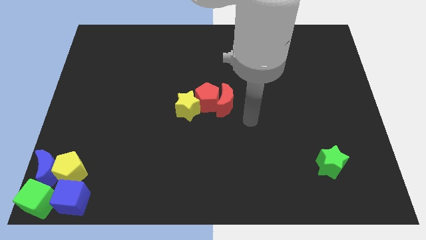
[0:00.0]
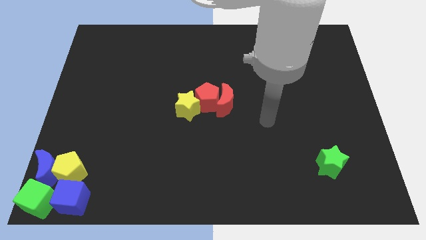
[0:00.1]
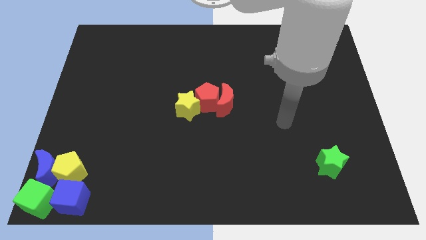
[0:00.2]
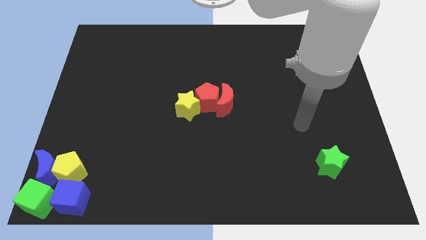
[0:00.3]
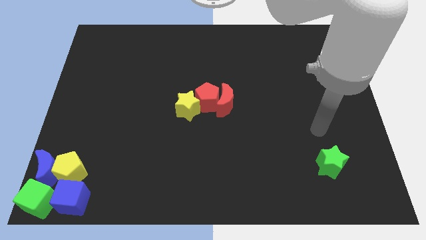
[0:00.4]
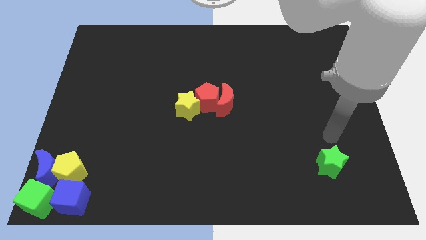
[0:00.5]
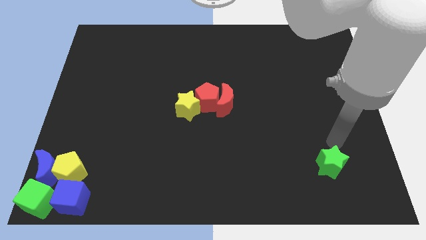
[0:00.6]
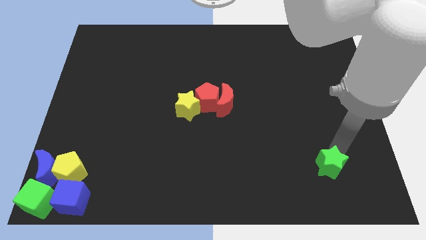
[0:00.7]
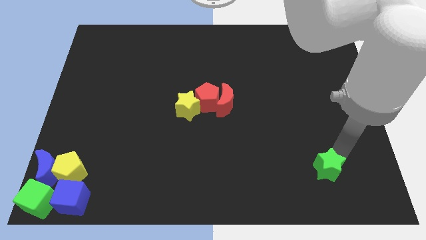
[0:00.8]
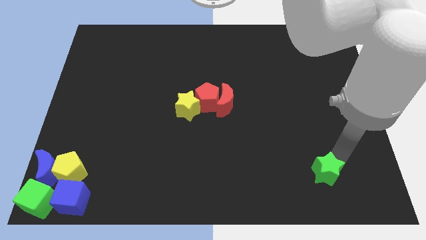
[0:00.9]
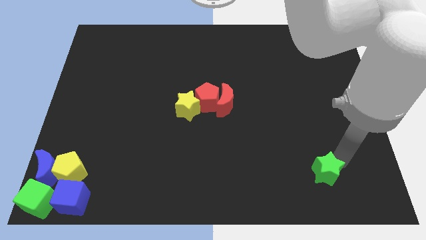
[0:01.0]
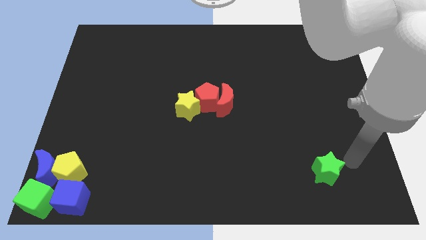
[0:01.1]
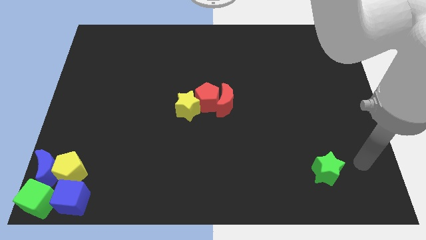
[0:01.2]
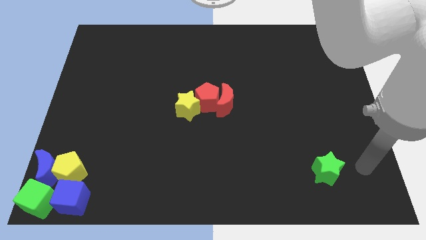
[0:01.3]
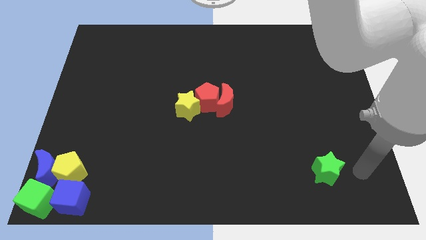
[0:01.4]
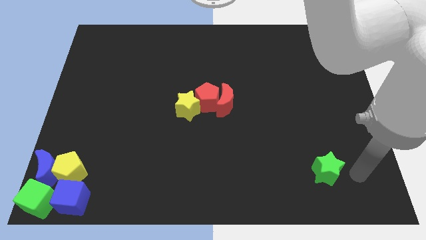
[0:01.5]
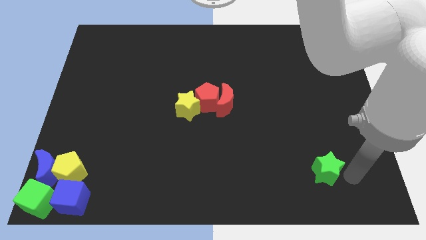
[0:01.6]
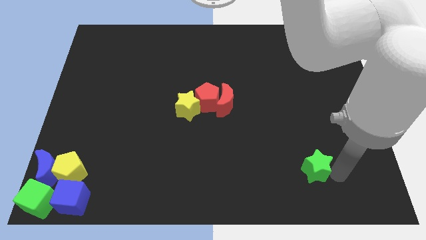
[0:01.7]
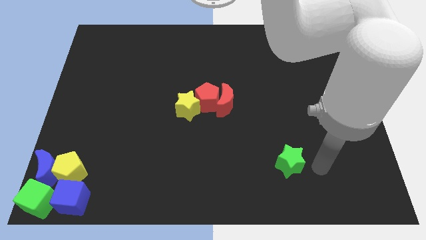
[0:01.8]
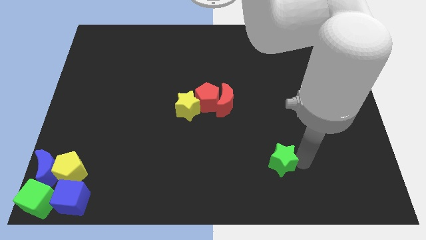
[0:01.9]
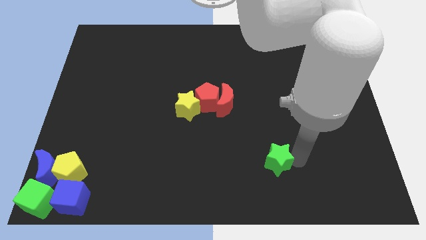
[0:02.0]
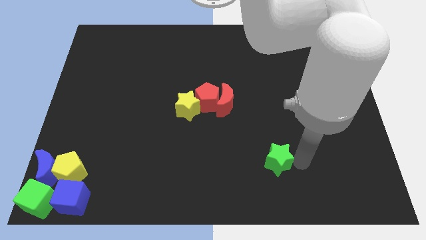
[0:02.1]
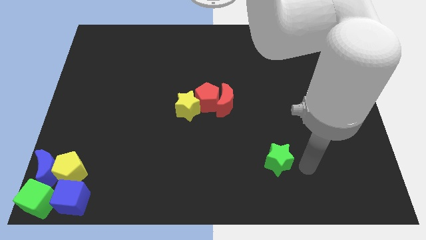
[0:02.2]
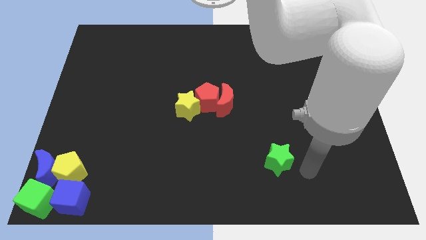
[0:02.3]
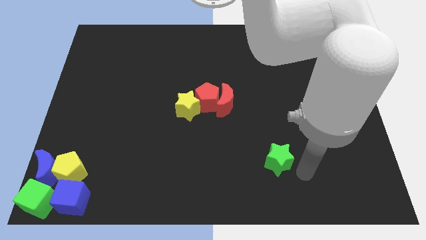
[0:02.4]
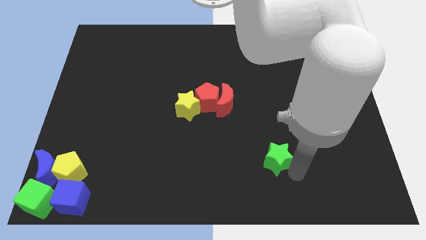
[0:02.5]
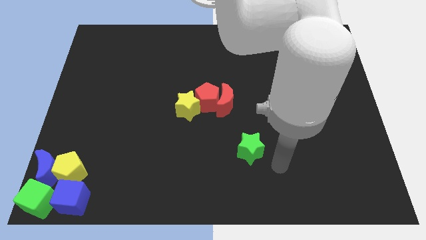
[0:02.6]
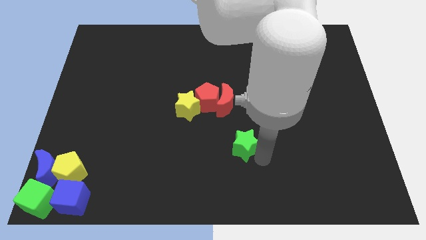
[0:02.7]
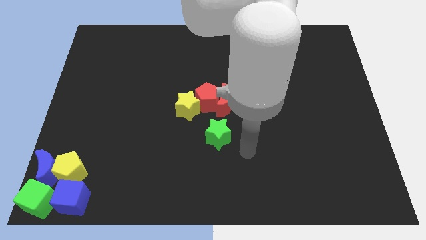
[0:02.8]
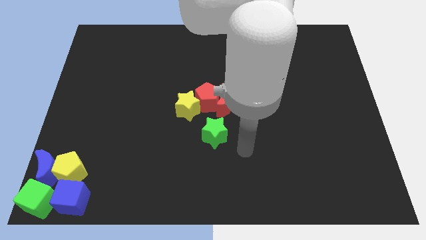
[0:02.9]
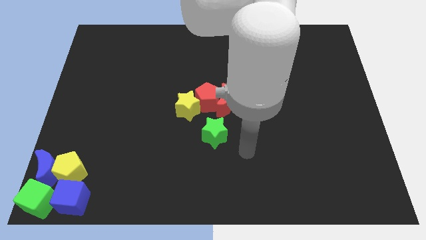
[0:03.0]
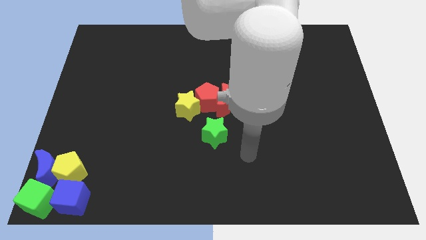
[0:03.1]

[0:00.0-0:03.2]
slide the green star towards the yellow star

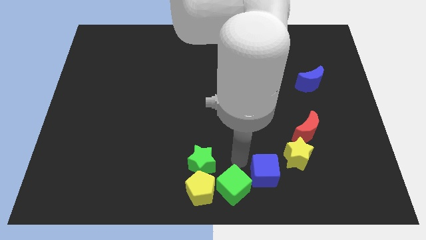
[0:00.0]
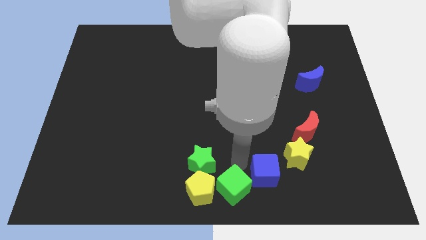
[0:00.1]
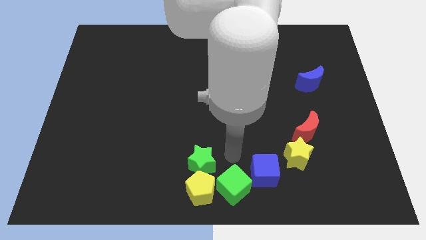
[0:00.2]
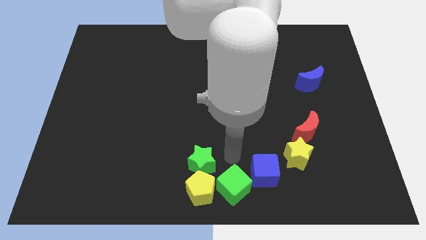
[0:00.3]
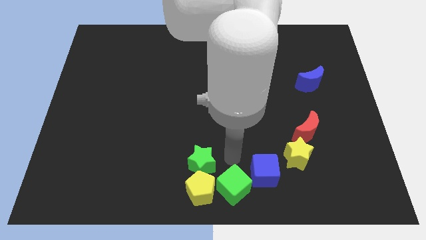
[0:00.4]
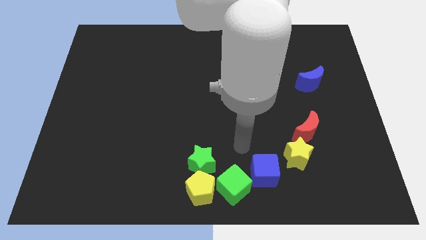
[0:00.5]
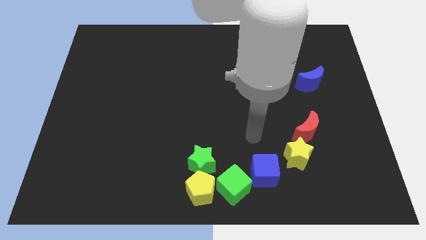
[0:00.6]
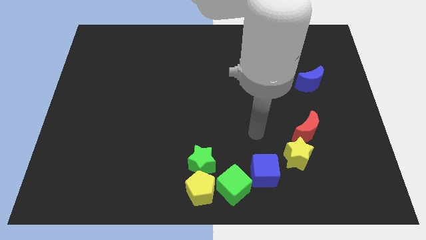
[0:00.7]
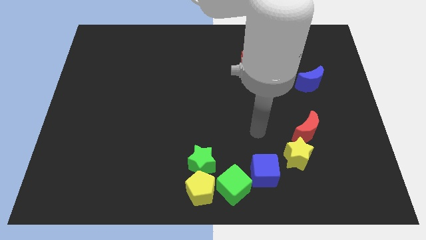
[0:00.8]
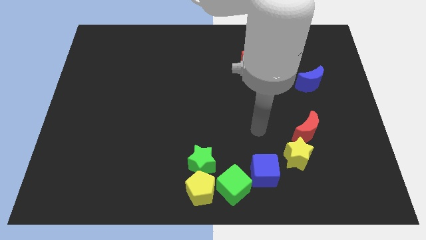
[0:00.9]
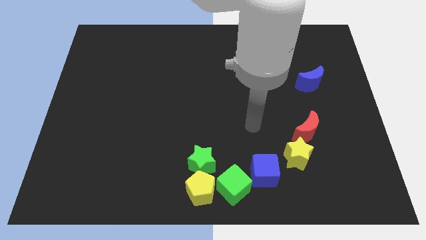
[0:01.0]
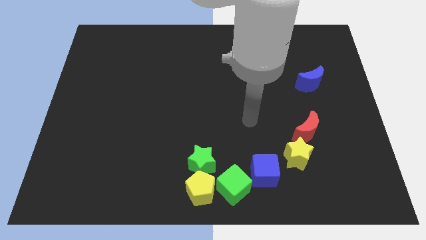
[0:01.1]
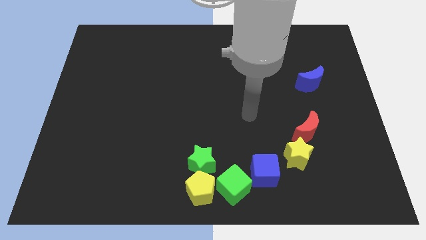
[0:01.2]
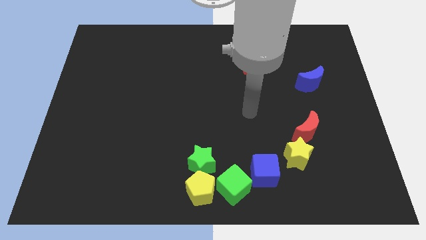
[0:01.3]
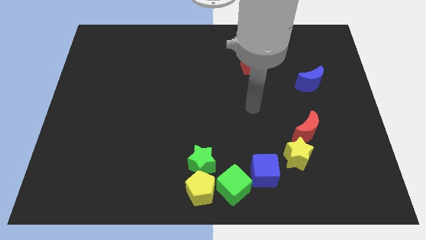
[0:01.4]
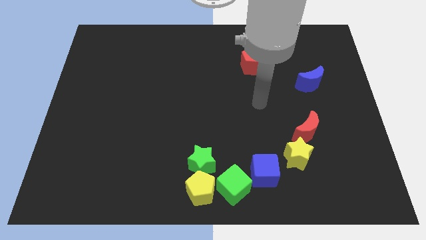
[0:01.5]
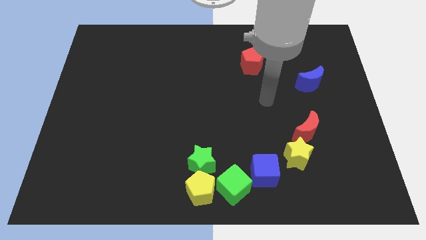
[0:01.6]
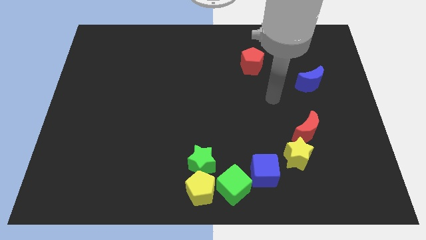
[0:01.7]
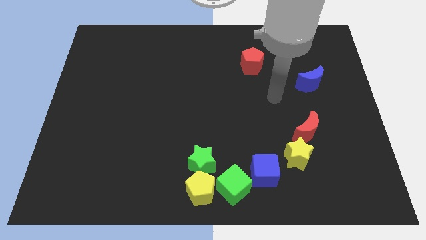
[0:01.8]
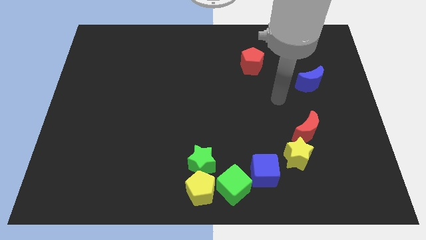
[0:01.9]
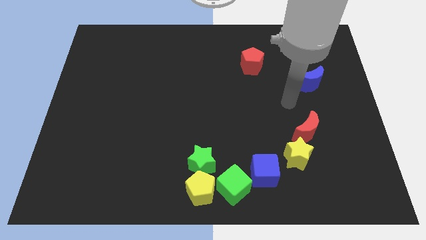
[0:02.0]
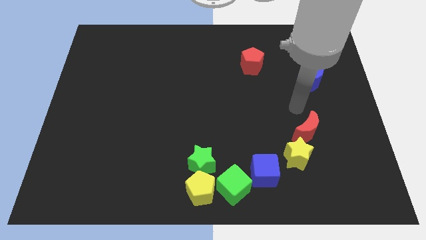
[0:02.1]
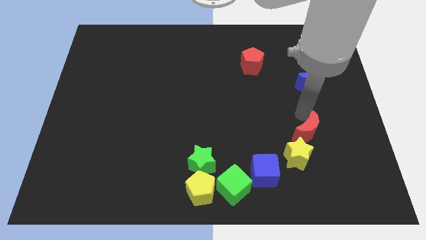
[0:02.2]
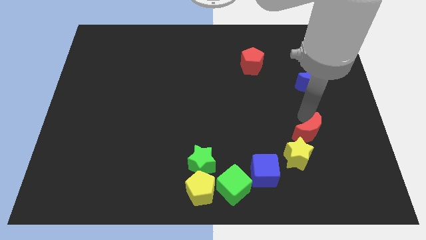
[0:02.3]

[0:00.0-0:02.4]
move your arm near to the red moon

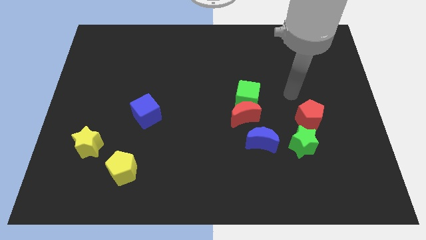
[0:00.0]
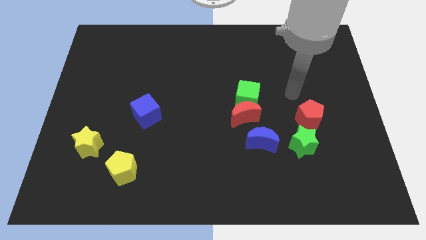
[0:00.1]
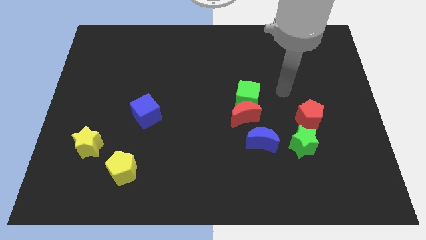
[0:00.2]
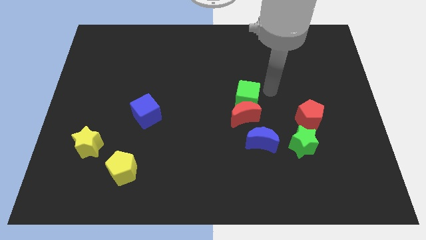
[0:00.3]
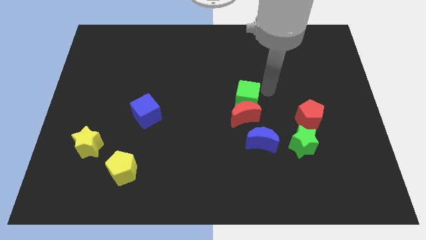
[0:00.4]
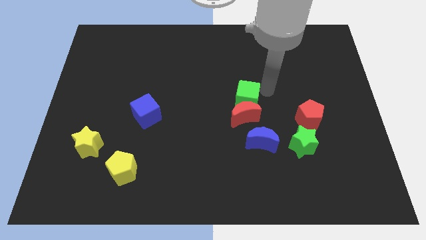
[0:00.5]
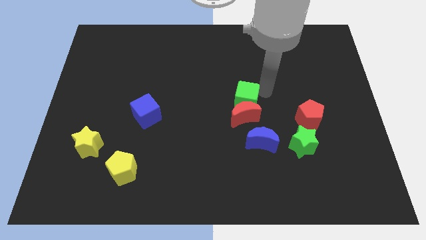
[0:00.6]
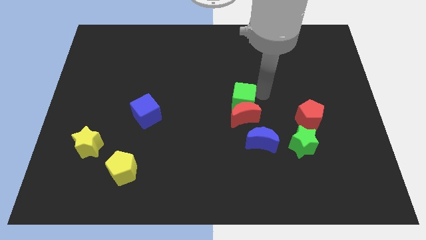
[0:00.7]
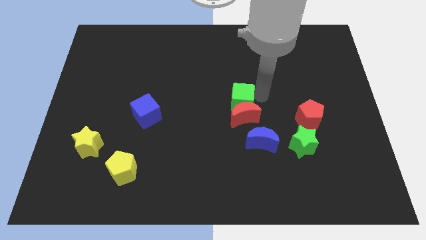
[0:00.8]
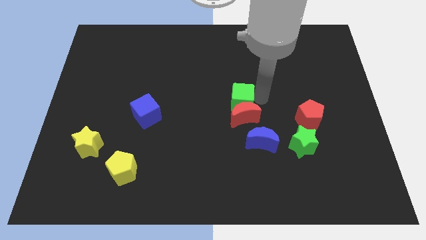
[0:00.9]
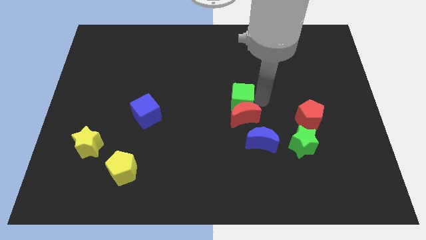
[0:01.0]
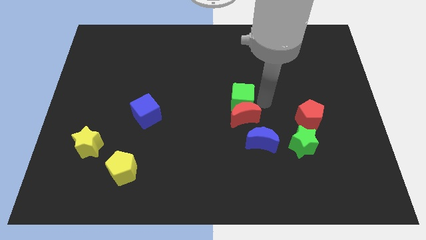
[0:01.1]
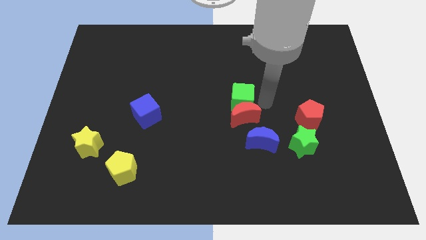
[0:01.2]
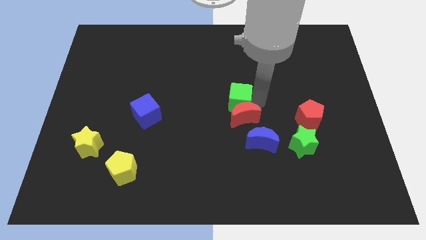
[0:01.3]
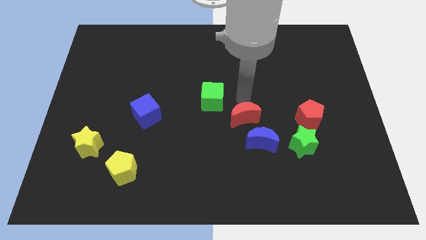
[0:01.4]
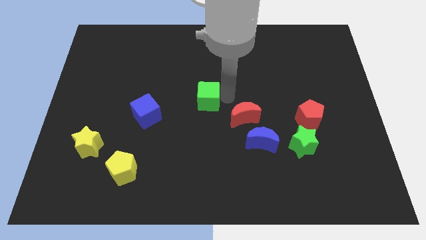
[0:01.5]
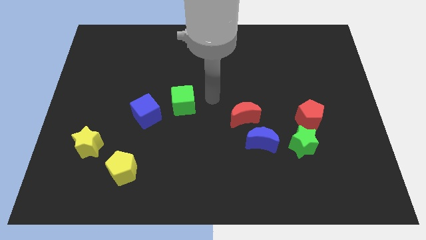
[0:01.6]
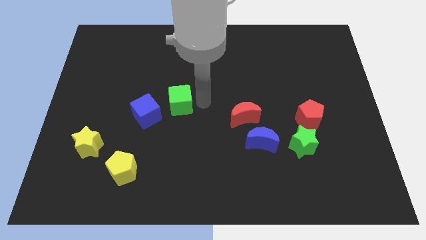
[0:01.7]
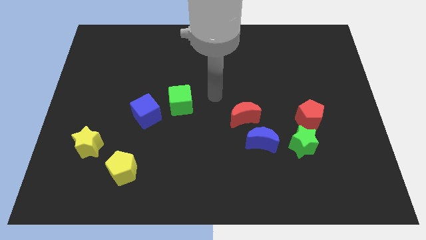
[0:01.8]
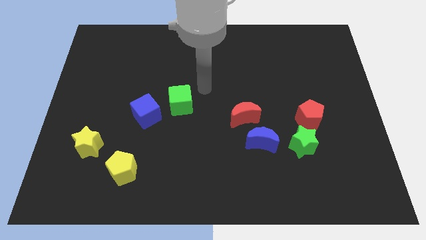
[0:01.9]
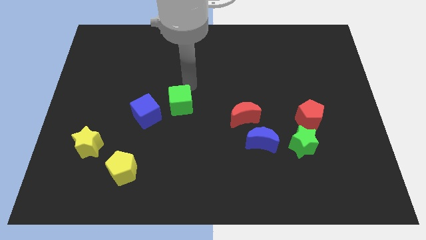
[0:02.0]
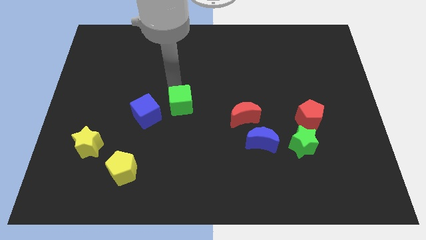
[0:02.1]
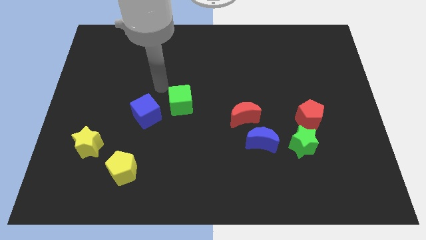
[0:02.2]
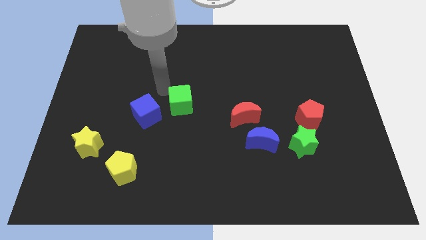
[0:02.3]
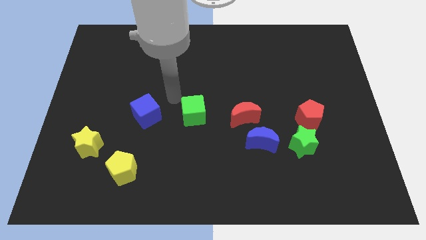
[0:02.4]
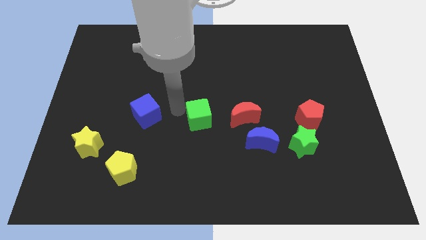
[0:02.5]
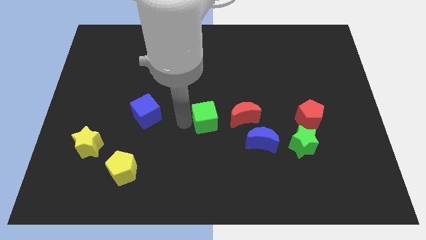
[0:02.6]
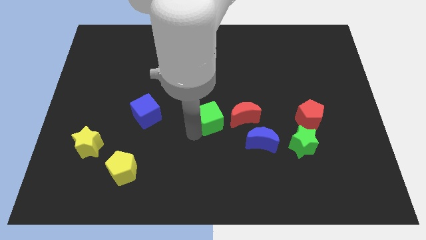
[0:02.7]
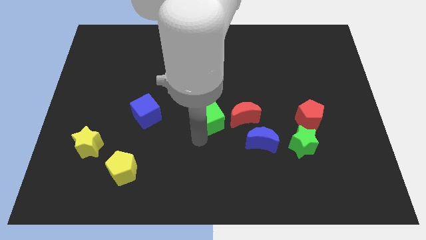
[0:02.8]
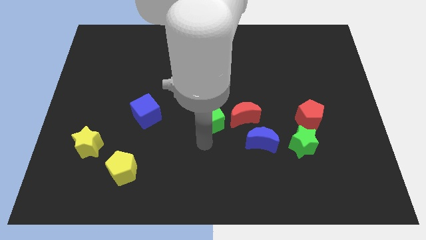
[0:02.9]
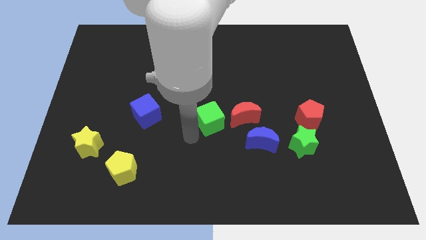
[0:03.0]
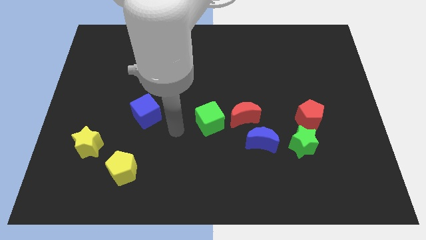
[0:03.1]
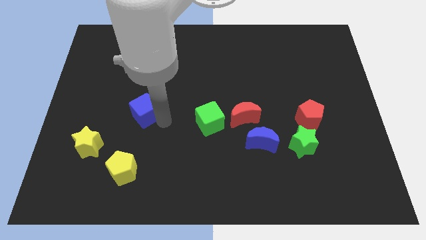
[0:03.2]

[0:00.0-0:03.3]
move the green cube to the left of the red crescent
